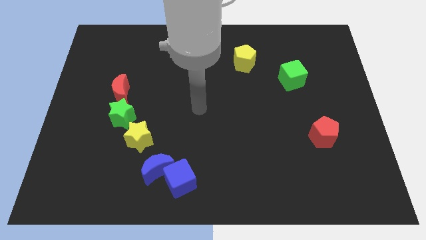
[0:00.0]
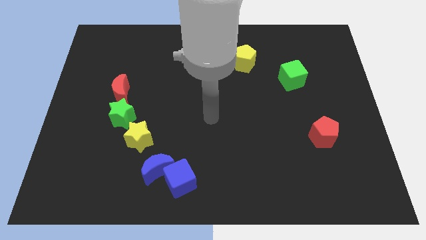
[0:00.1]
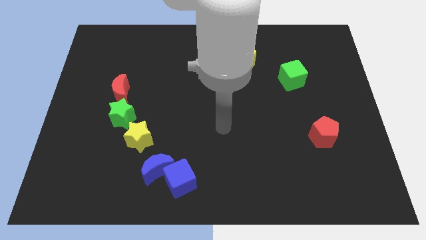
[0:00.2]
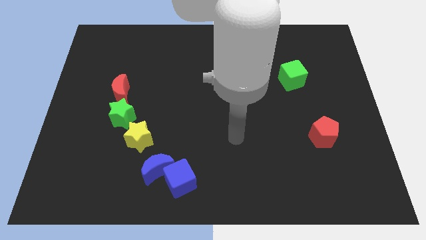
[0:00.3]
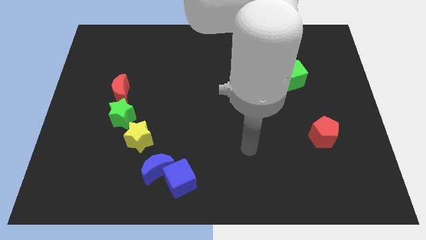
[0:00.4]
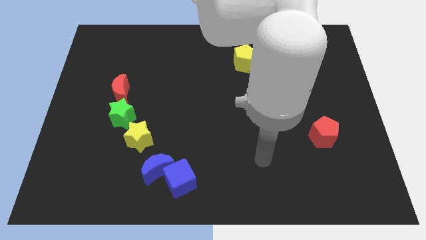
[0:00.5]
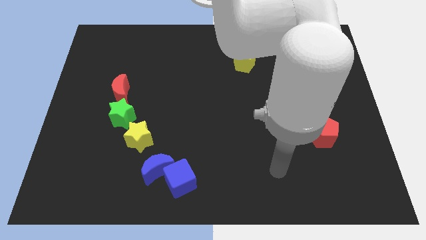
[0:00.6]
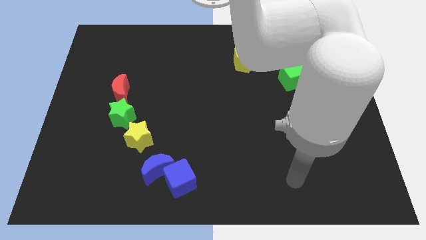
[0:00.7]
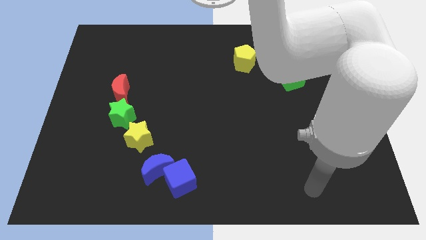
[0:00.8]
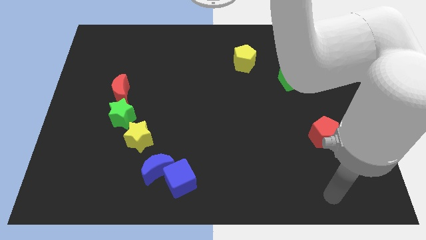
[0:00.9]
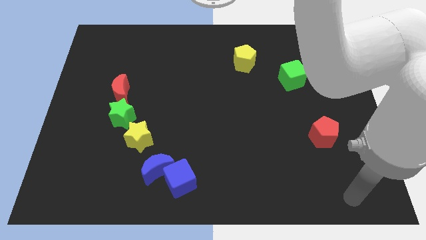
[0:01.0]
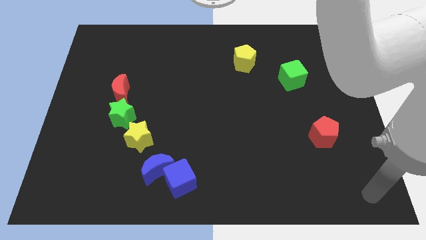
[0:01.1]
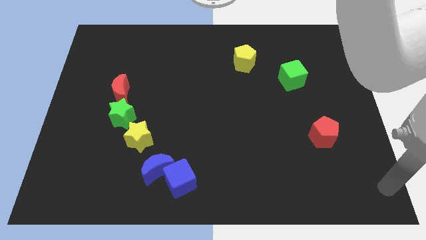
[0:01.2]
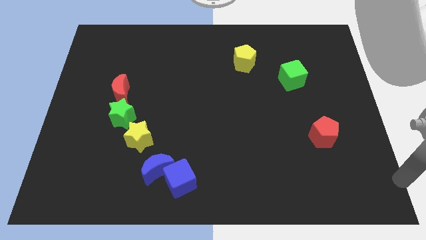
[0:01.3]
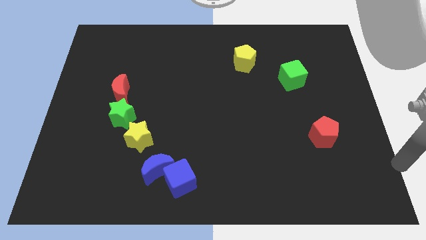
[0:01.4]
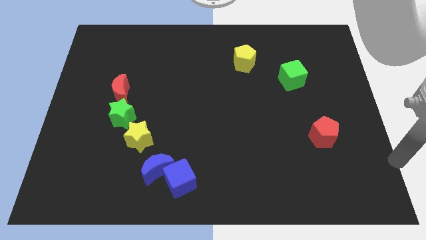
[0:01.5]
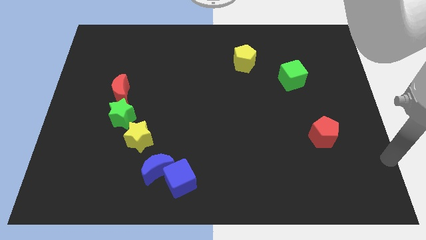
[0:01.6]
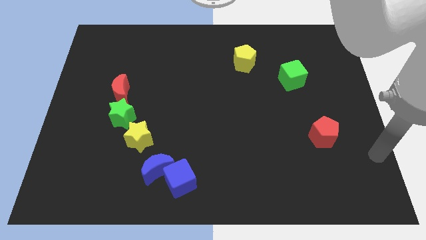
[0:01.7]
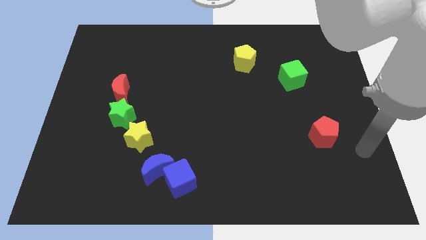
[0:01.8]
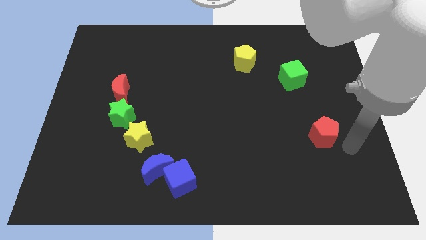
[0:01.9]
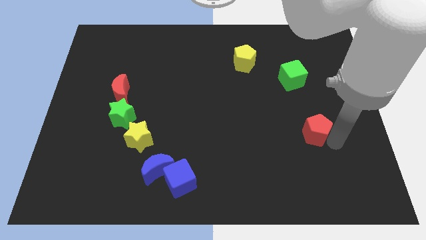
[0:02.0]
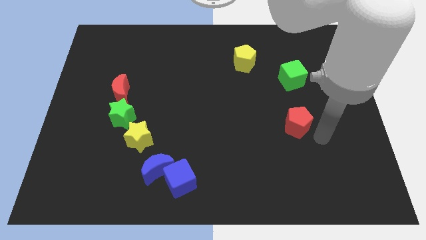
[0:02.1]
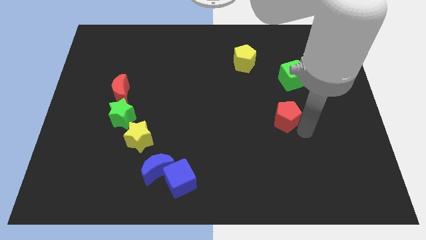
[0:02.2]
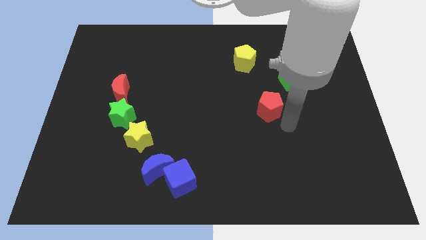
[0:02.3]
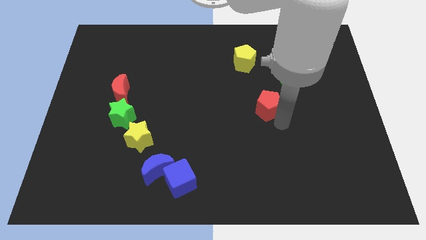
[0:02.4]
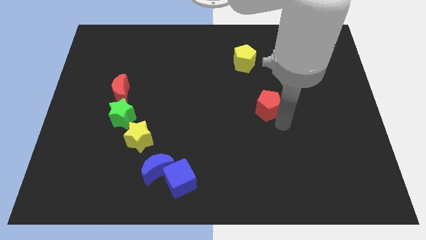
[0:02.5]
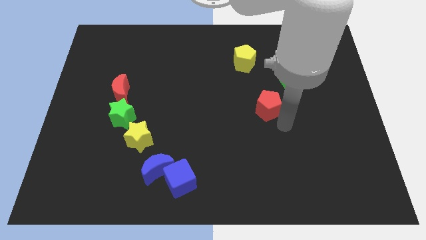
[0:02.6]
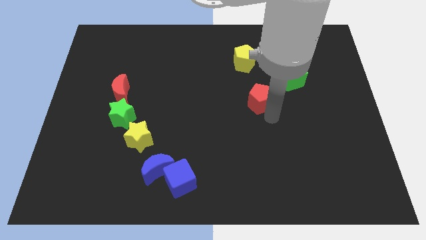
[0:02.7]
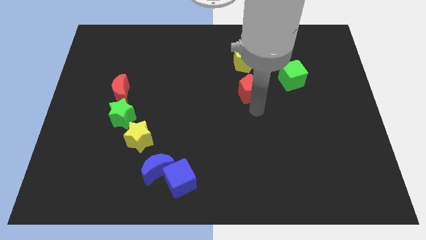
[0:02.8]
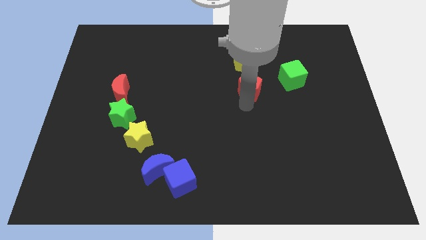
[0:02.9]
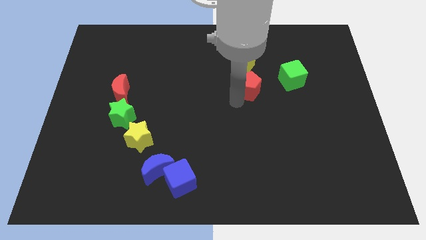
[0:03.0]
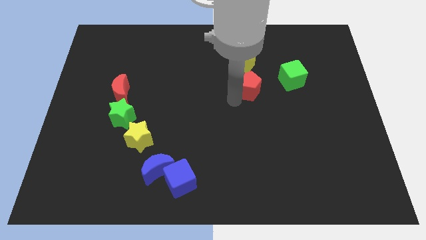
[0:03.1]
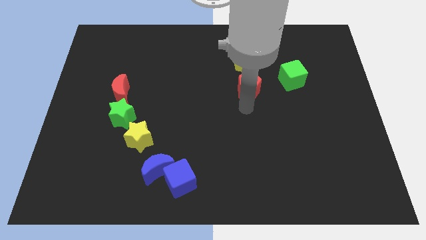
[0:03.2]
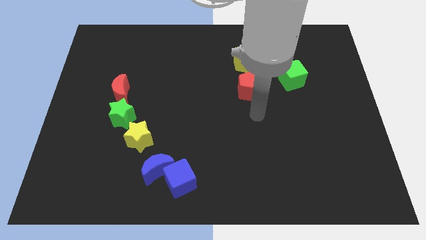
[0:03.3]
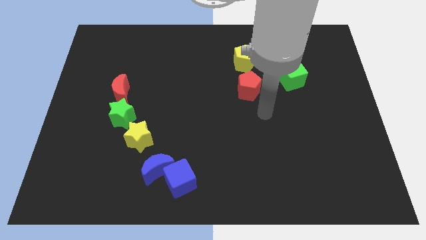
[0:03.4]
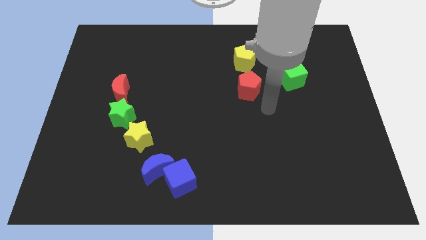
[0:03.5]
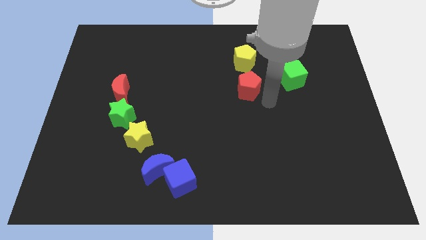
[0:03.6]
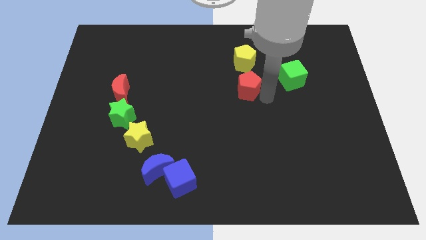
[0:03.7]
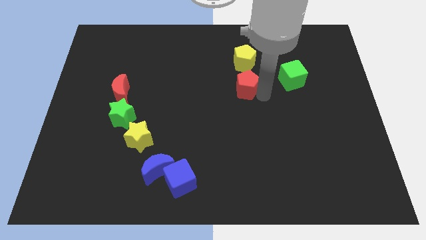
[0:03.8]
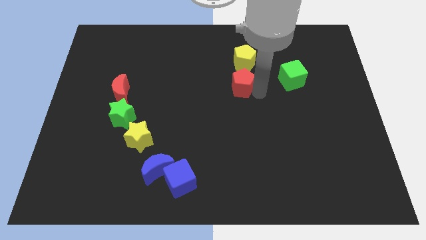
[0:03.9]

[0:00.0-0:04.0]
push the red pentagon to the bottom of the yellow pentagon

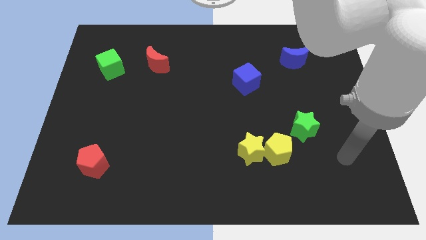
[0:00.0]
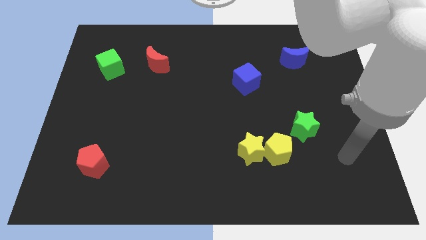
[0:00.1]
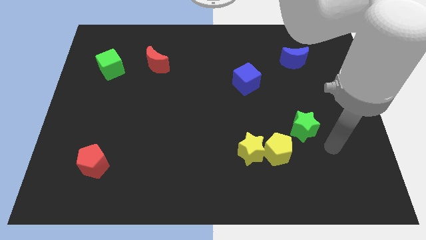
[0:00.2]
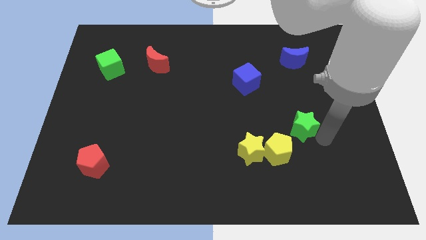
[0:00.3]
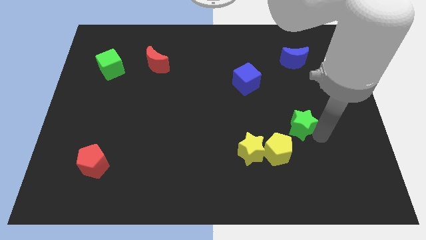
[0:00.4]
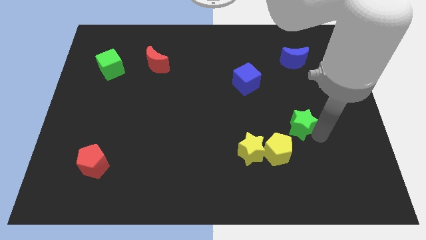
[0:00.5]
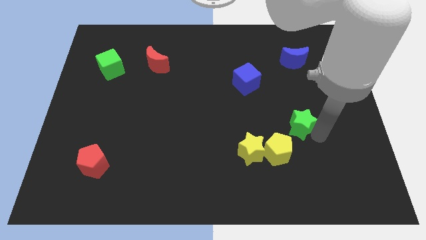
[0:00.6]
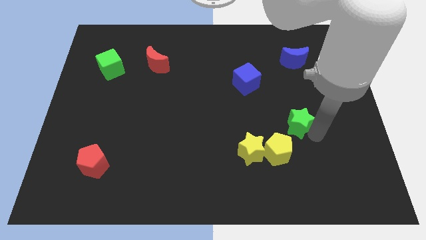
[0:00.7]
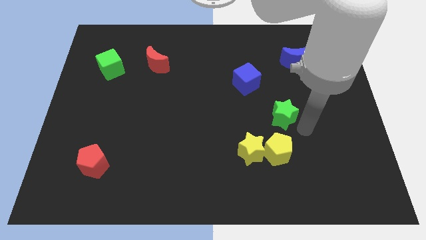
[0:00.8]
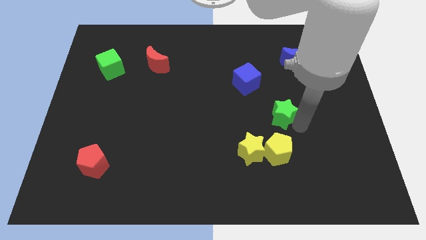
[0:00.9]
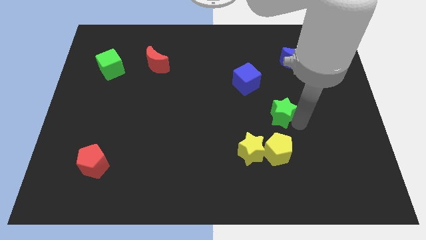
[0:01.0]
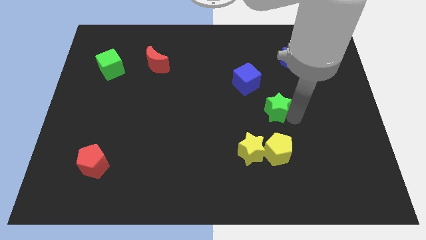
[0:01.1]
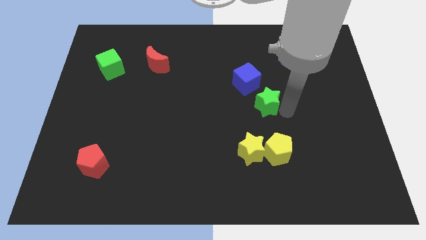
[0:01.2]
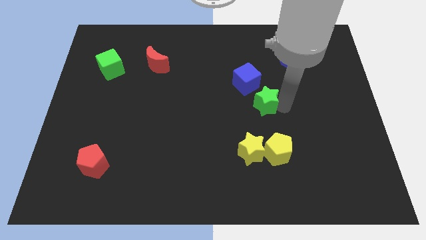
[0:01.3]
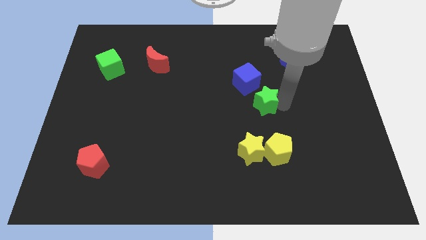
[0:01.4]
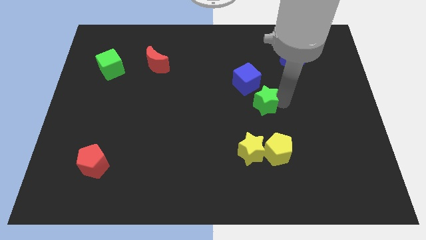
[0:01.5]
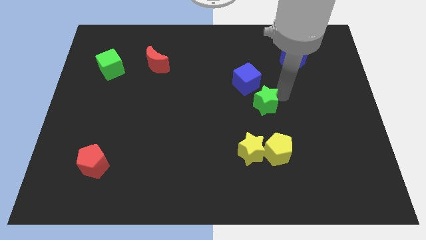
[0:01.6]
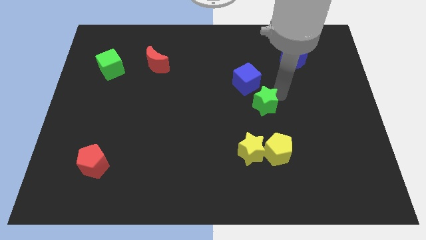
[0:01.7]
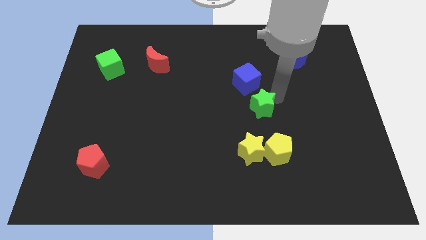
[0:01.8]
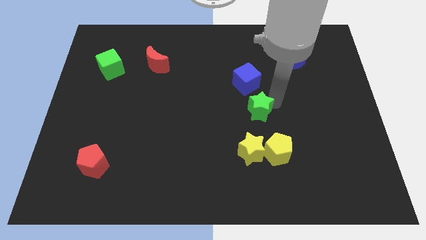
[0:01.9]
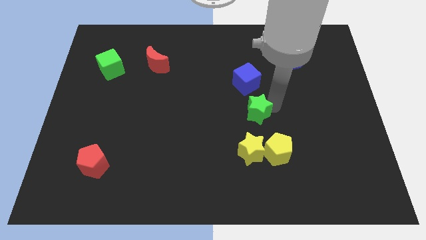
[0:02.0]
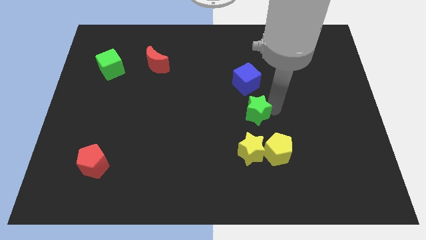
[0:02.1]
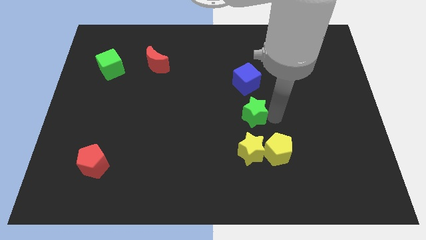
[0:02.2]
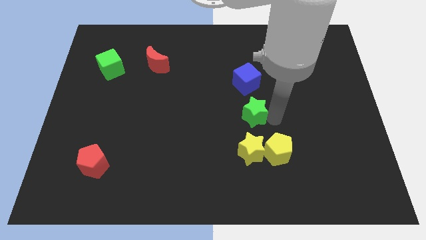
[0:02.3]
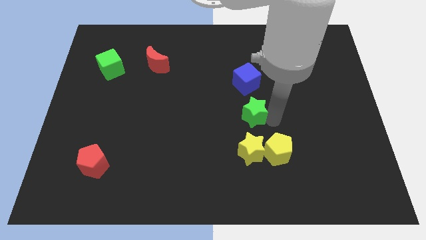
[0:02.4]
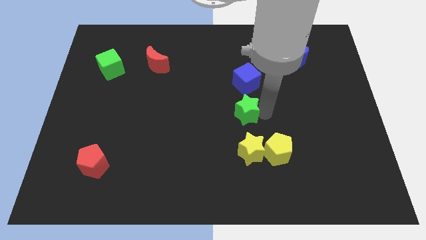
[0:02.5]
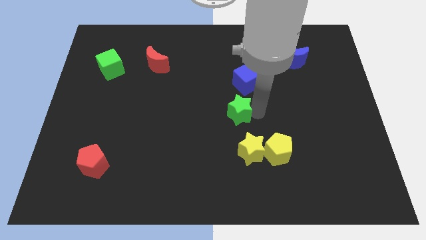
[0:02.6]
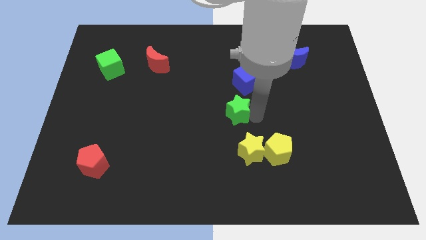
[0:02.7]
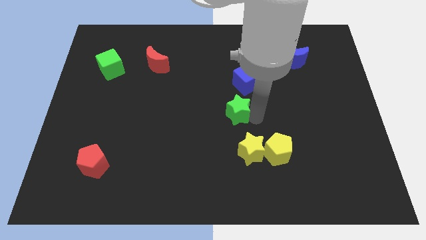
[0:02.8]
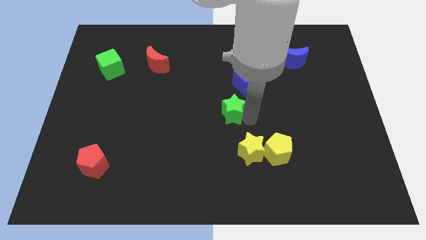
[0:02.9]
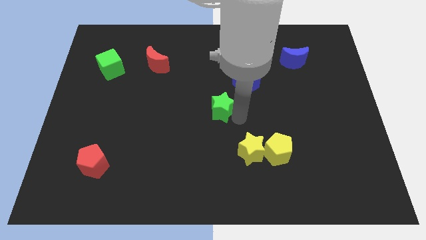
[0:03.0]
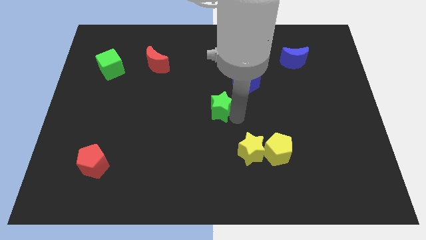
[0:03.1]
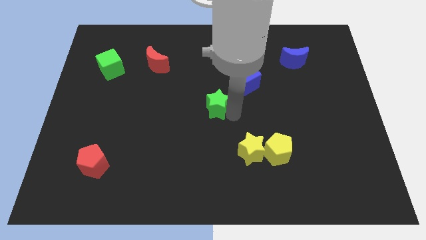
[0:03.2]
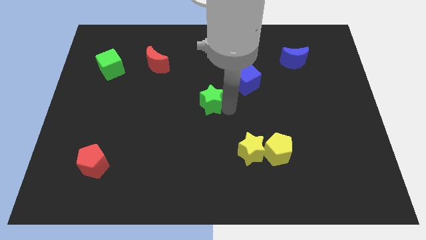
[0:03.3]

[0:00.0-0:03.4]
move the green star to the center of the board

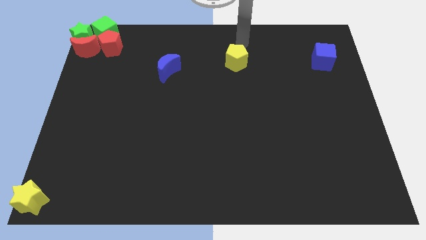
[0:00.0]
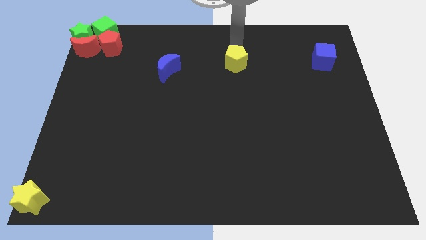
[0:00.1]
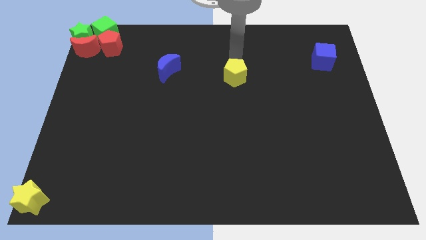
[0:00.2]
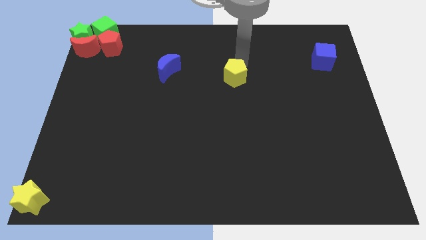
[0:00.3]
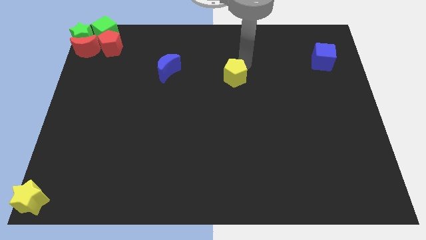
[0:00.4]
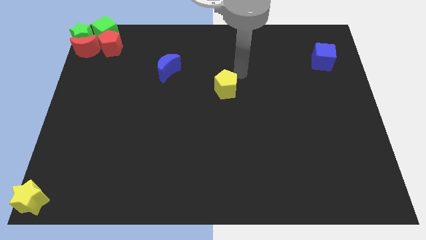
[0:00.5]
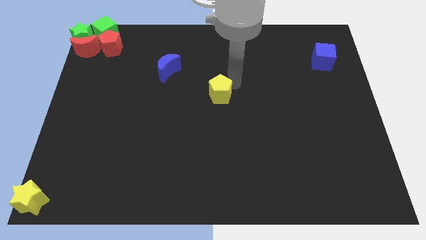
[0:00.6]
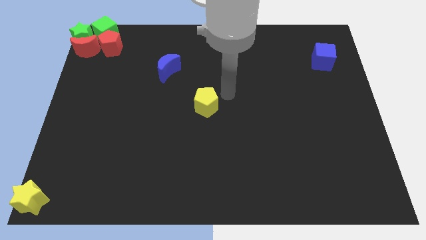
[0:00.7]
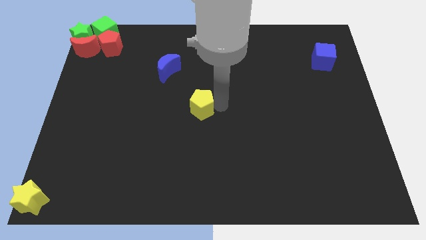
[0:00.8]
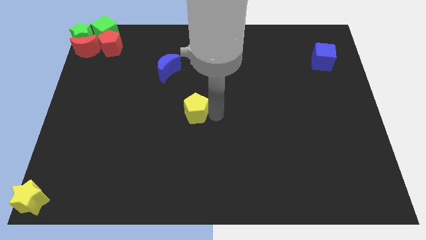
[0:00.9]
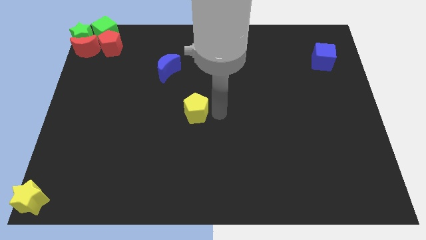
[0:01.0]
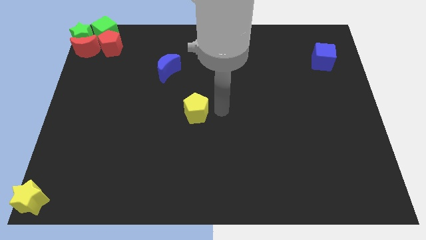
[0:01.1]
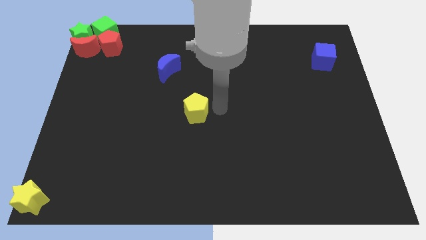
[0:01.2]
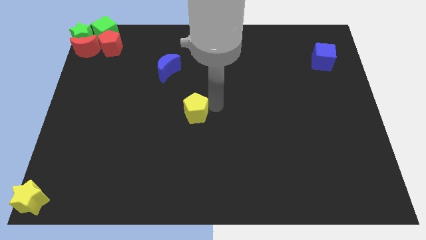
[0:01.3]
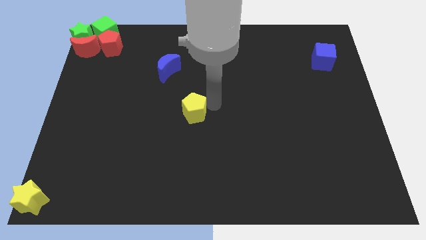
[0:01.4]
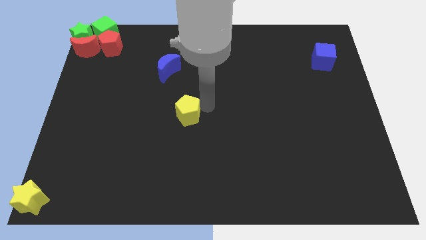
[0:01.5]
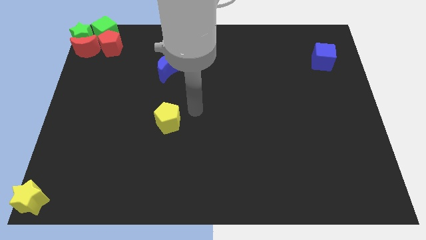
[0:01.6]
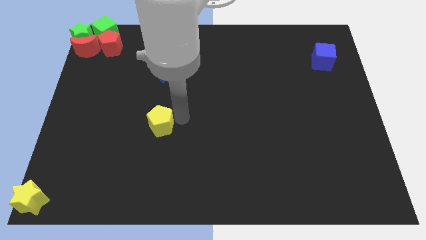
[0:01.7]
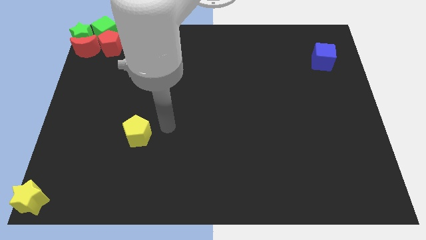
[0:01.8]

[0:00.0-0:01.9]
move the yellow pentagon diagonal to the yellow star
